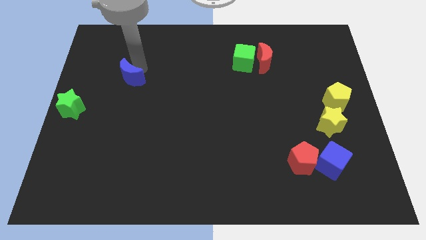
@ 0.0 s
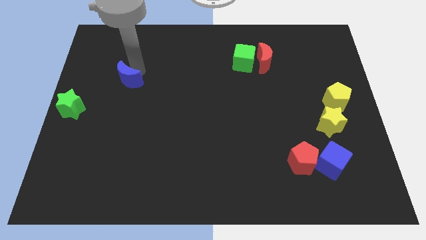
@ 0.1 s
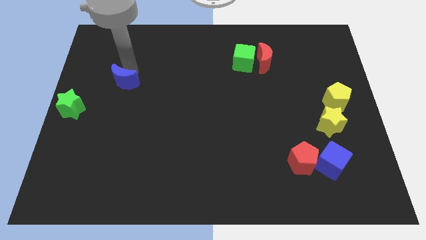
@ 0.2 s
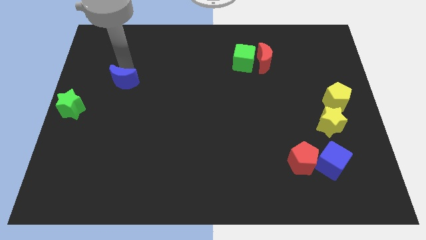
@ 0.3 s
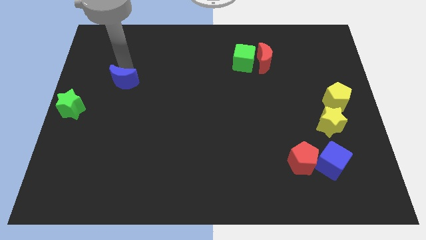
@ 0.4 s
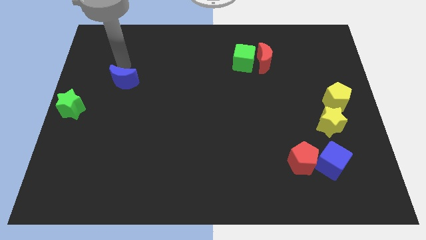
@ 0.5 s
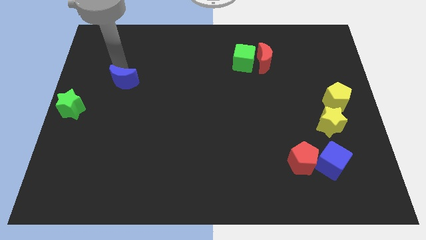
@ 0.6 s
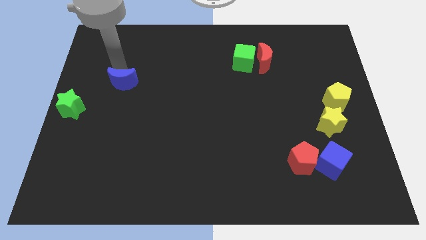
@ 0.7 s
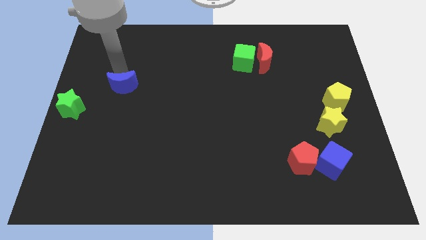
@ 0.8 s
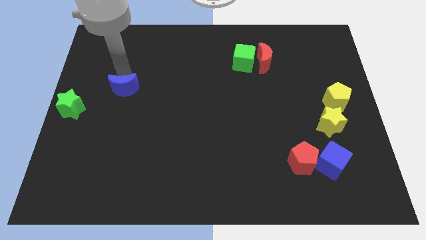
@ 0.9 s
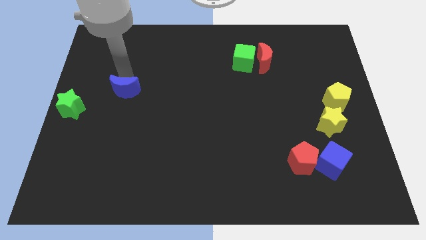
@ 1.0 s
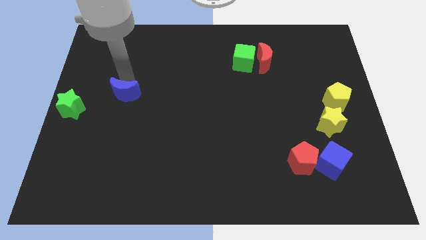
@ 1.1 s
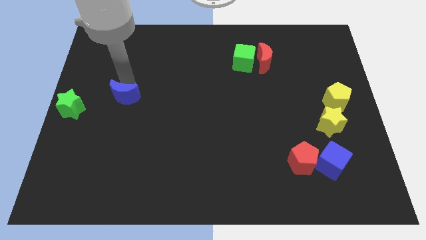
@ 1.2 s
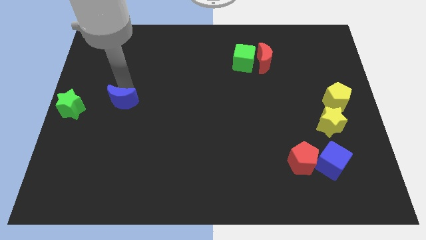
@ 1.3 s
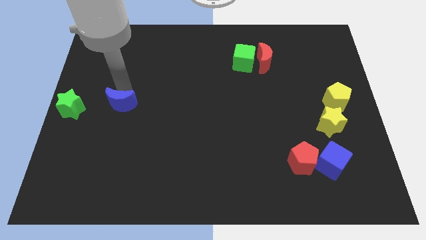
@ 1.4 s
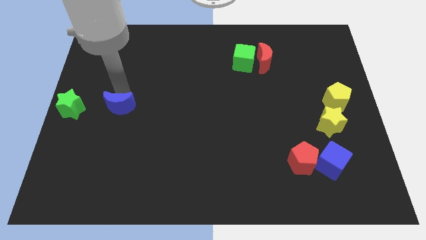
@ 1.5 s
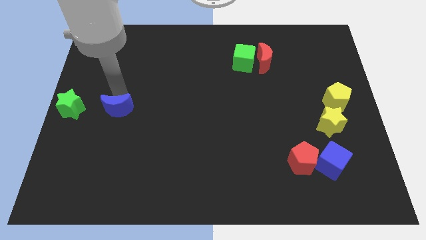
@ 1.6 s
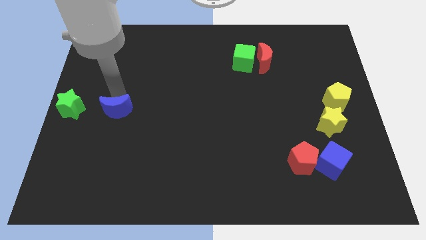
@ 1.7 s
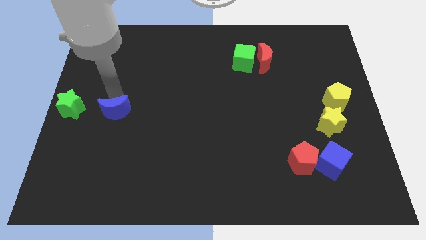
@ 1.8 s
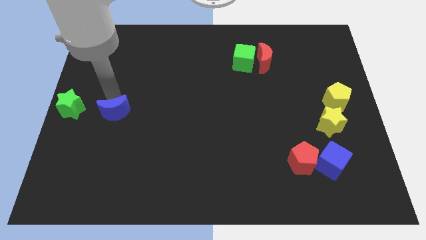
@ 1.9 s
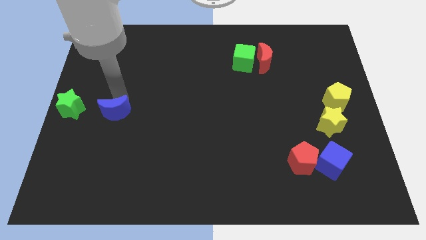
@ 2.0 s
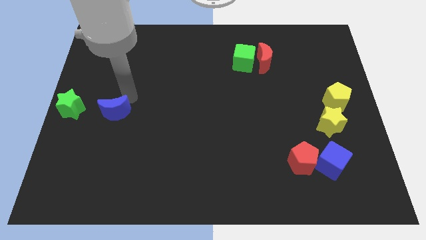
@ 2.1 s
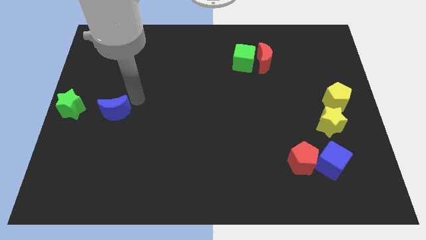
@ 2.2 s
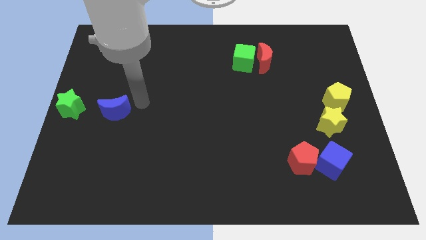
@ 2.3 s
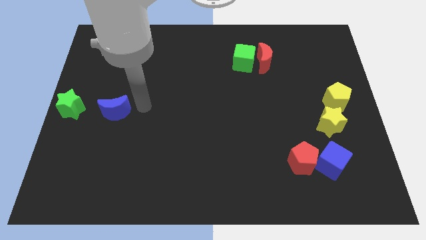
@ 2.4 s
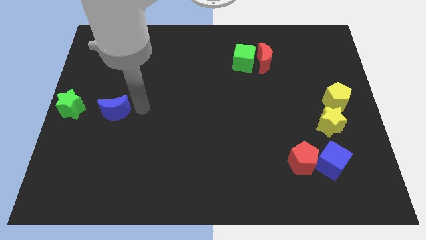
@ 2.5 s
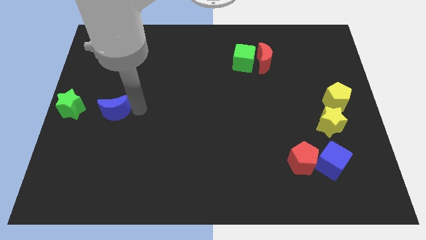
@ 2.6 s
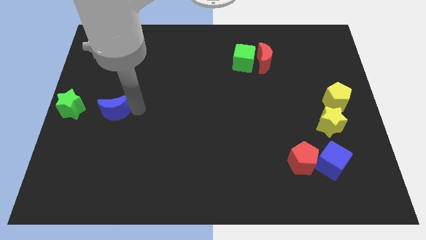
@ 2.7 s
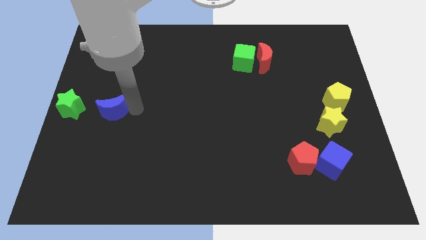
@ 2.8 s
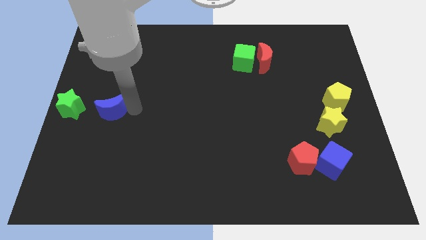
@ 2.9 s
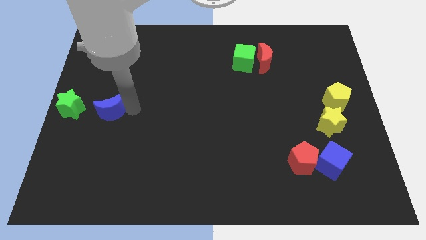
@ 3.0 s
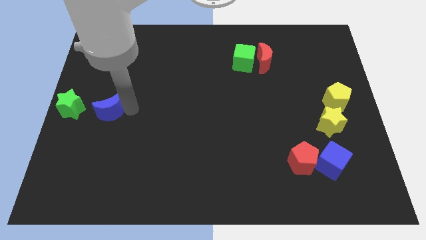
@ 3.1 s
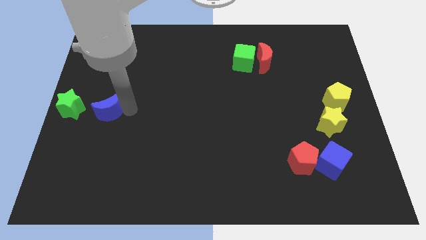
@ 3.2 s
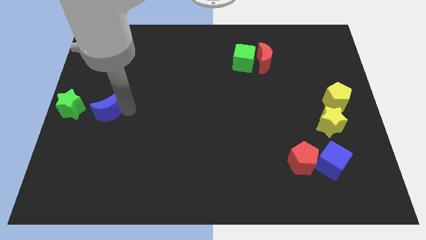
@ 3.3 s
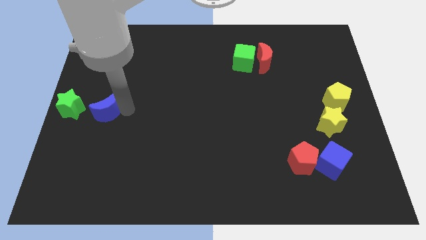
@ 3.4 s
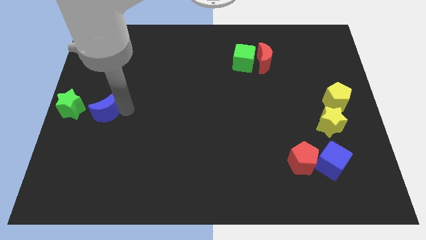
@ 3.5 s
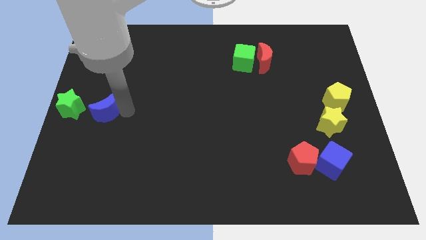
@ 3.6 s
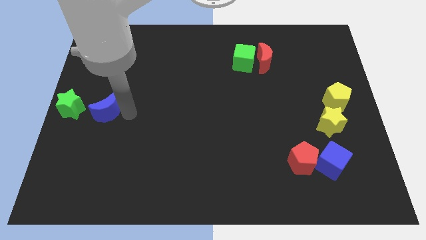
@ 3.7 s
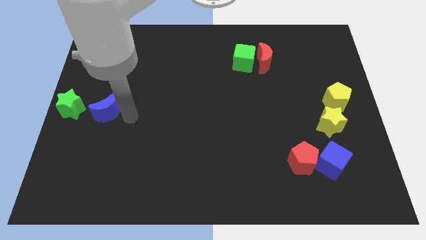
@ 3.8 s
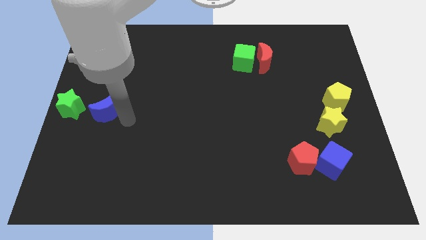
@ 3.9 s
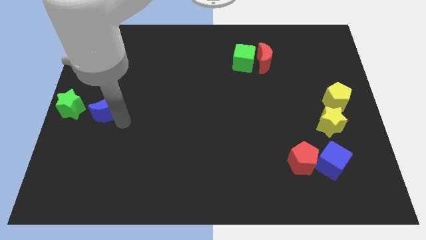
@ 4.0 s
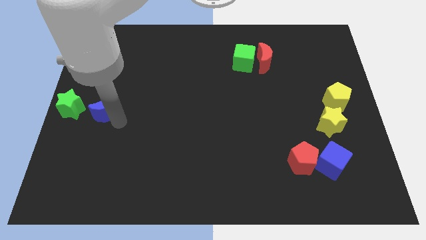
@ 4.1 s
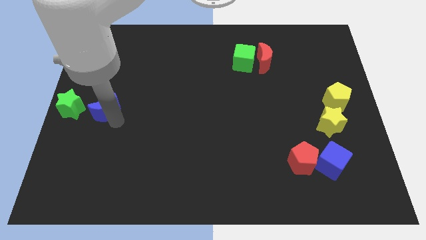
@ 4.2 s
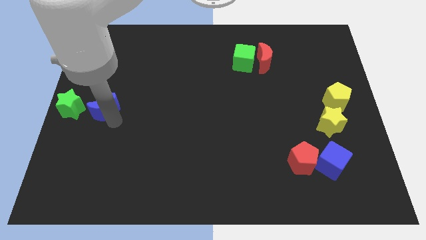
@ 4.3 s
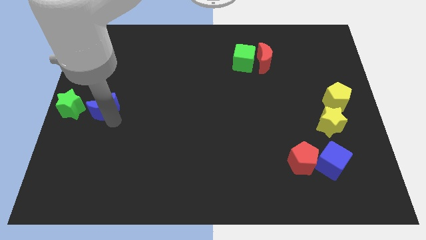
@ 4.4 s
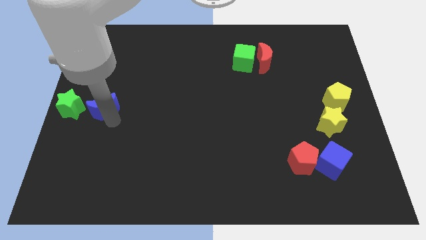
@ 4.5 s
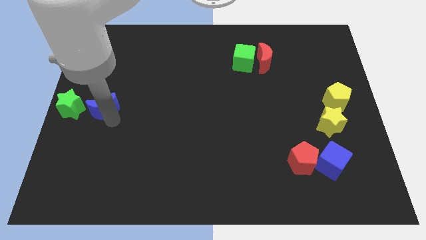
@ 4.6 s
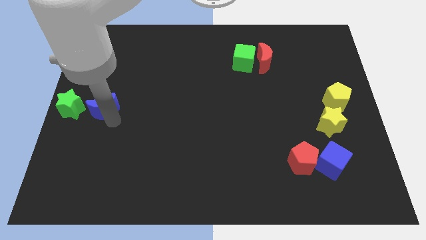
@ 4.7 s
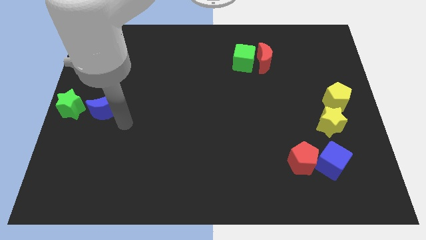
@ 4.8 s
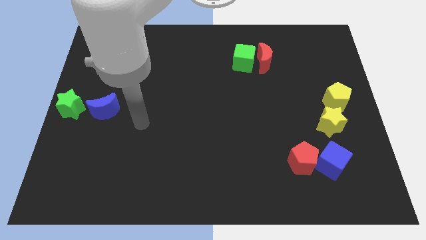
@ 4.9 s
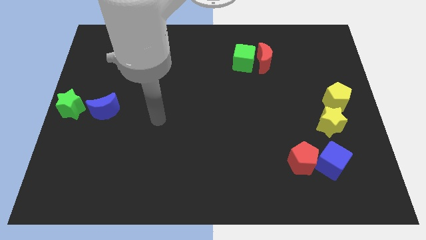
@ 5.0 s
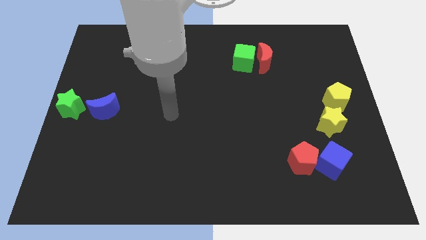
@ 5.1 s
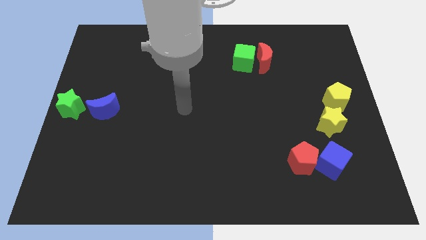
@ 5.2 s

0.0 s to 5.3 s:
move the blue moon to the right of the green star

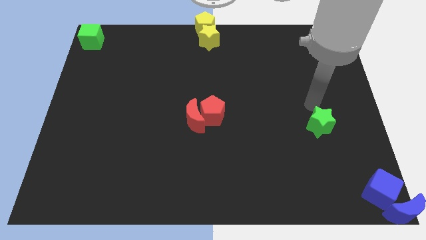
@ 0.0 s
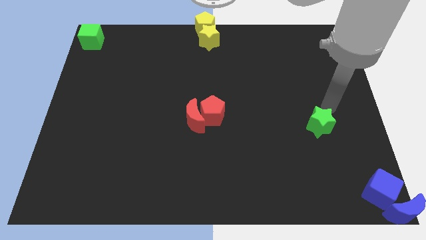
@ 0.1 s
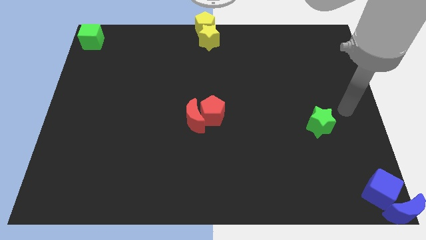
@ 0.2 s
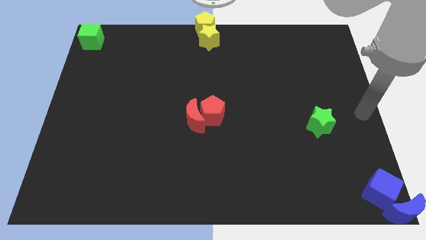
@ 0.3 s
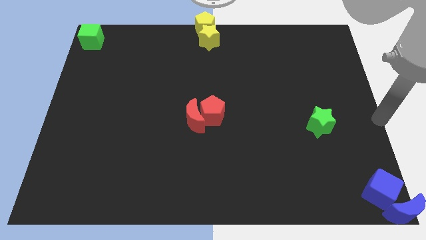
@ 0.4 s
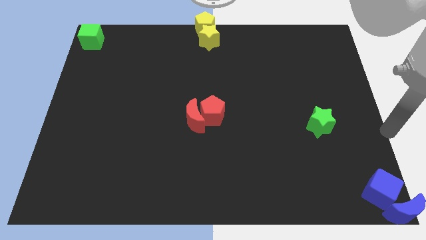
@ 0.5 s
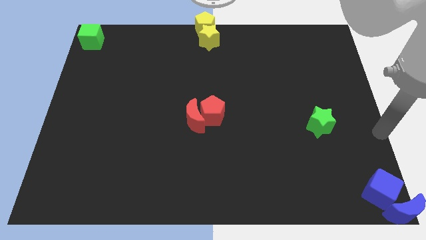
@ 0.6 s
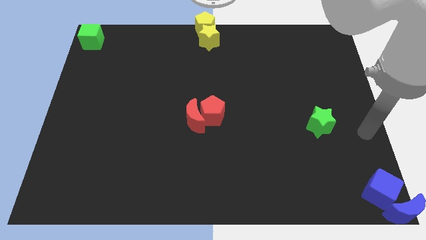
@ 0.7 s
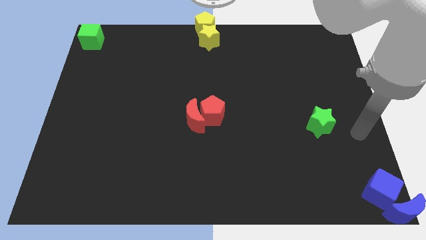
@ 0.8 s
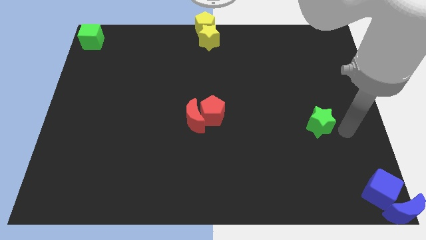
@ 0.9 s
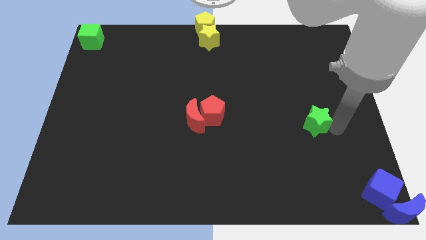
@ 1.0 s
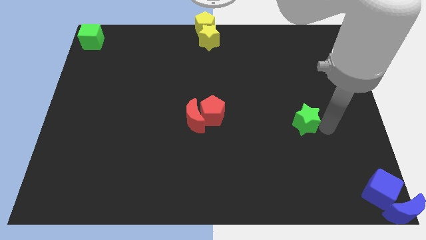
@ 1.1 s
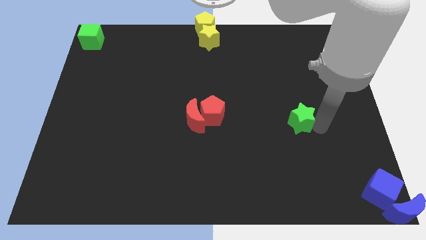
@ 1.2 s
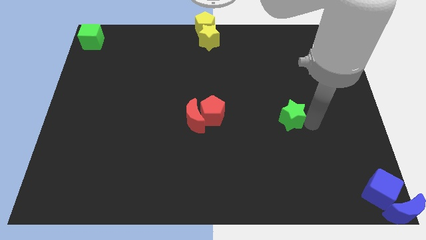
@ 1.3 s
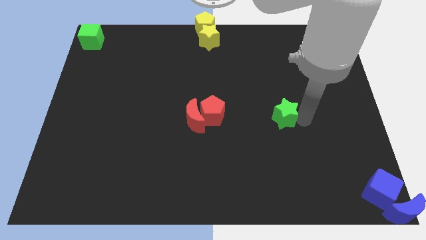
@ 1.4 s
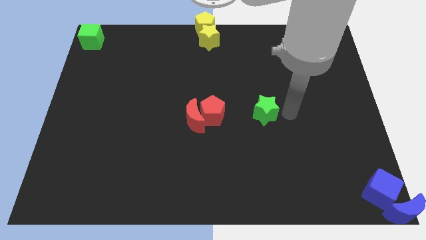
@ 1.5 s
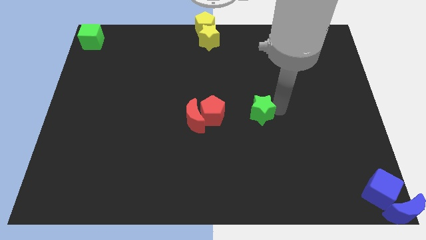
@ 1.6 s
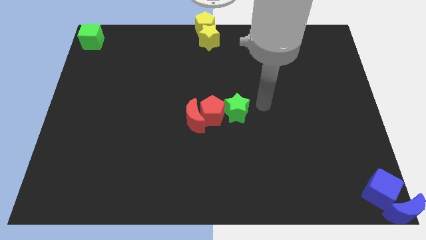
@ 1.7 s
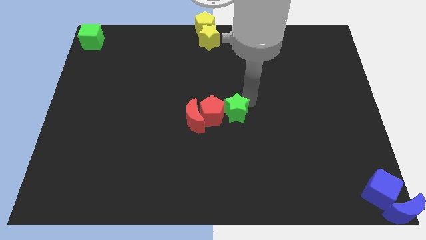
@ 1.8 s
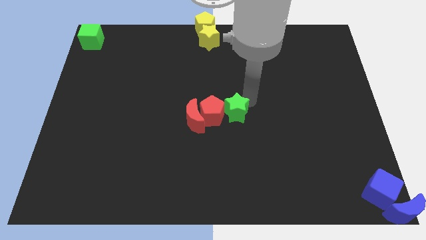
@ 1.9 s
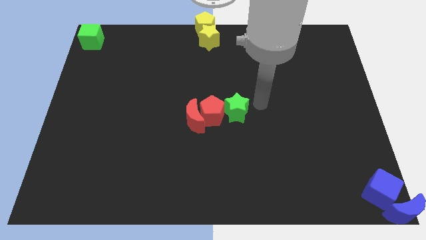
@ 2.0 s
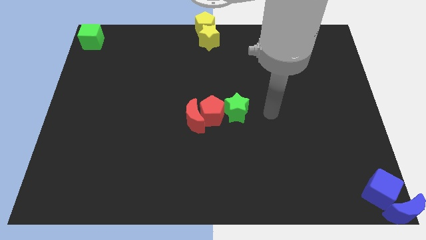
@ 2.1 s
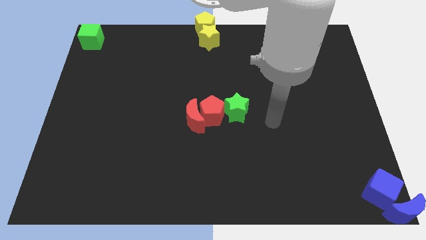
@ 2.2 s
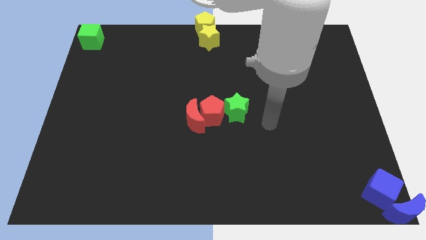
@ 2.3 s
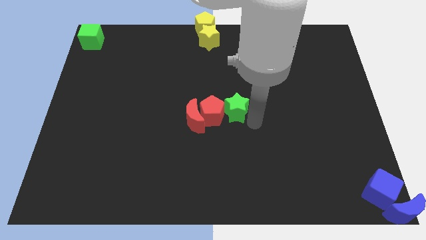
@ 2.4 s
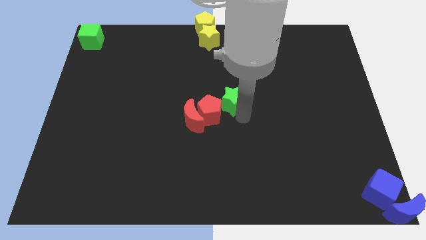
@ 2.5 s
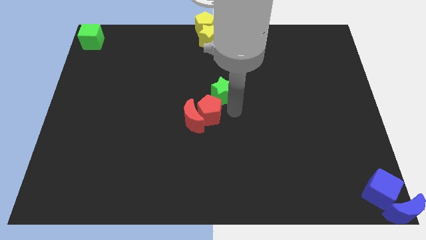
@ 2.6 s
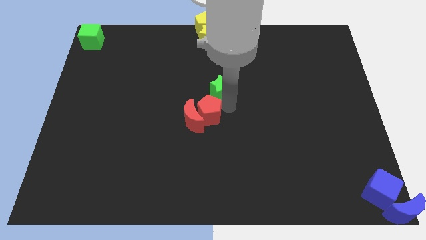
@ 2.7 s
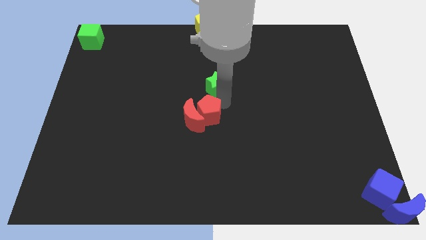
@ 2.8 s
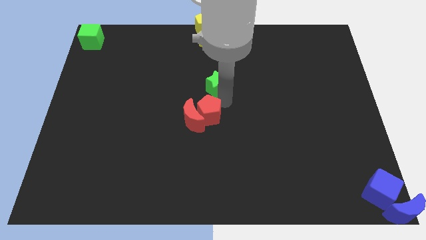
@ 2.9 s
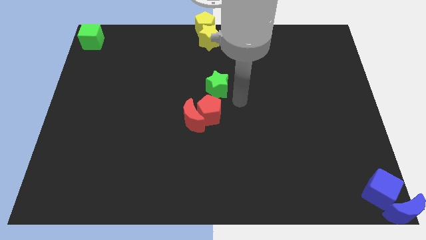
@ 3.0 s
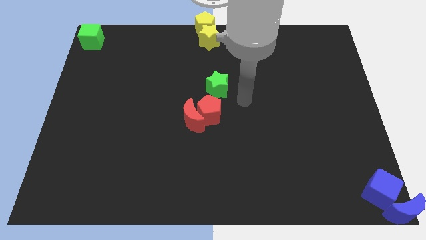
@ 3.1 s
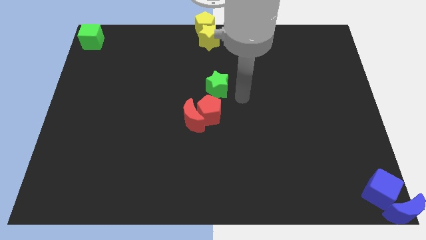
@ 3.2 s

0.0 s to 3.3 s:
move the green star above to the red pentagon

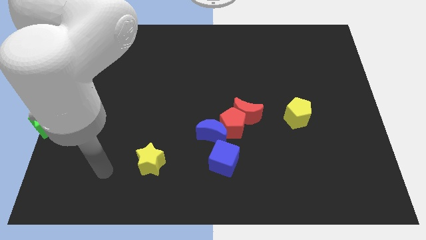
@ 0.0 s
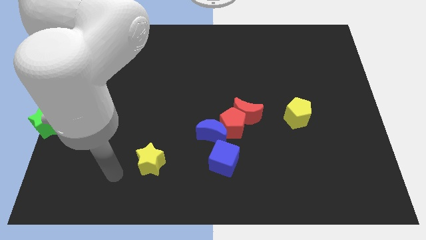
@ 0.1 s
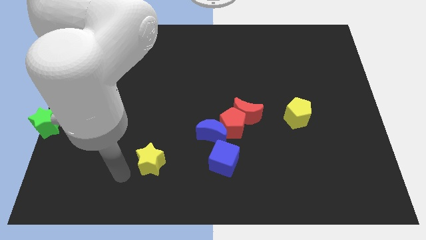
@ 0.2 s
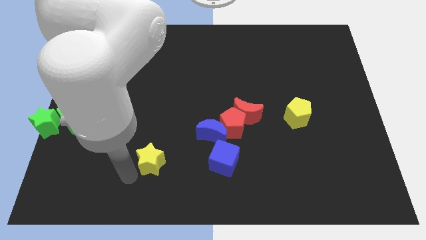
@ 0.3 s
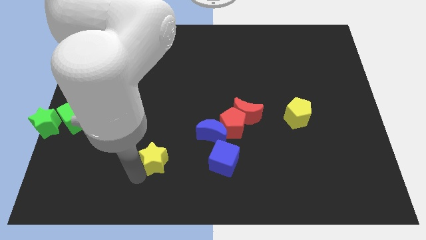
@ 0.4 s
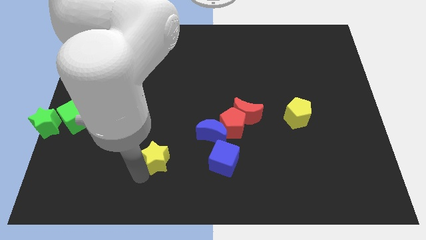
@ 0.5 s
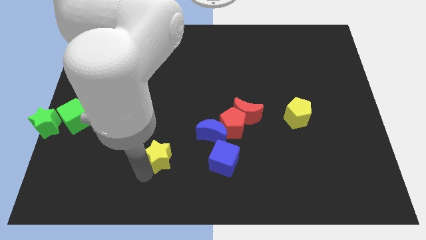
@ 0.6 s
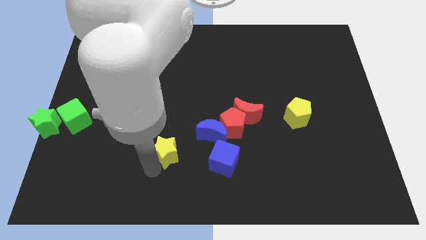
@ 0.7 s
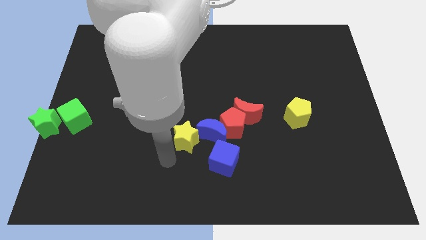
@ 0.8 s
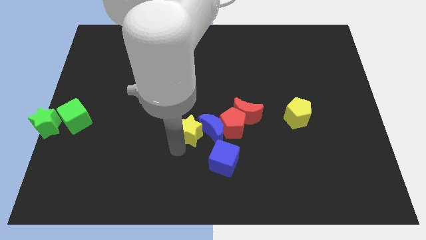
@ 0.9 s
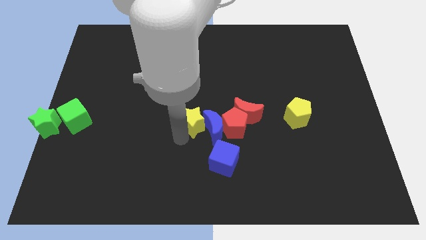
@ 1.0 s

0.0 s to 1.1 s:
slide yellow star into blue moon
